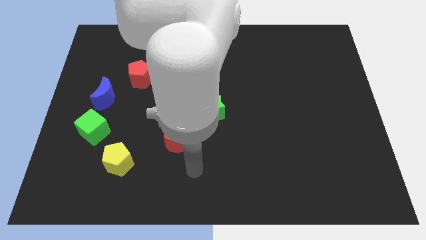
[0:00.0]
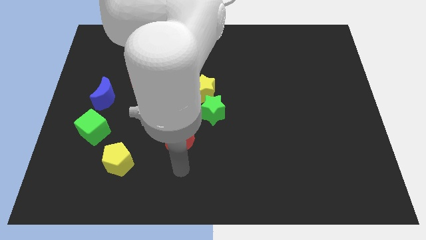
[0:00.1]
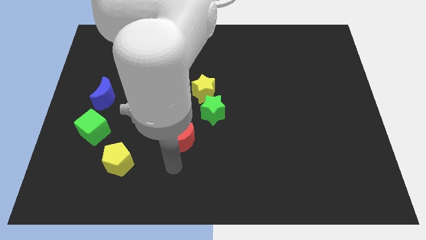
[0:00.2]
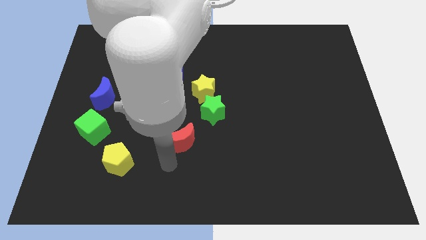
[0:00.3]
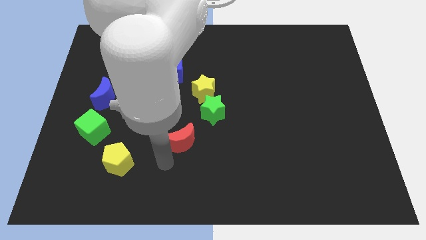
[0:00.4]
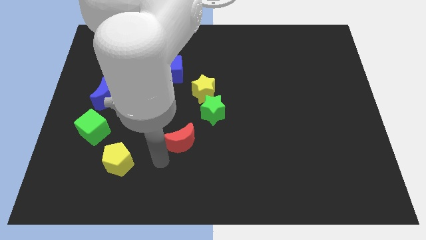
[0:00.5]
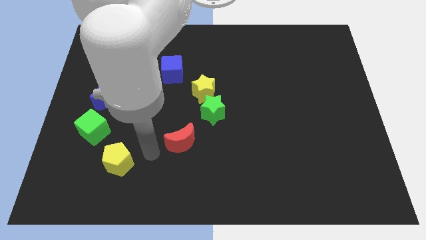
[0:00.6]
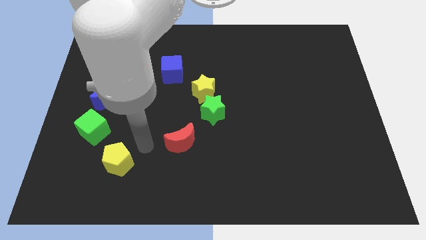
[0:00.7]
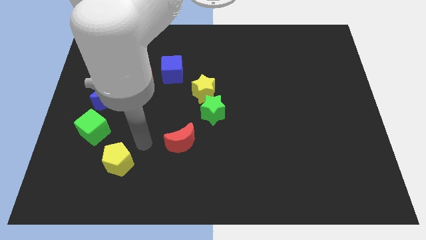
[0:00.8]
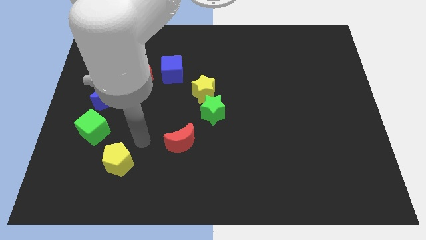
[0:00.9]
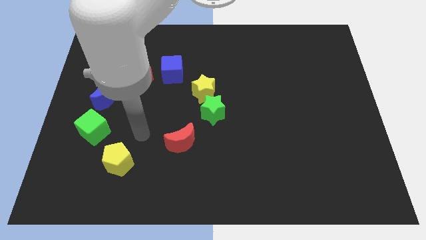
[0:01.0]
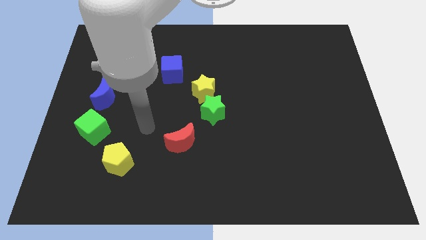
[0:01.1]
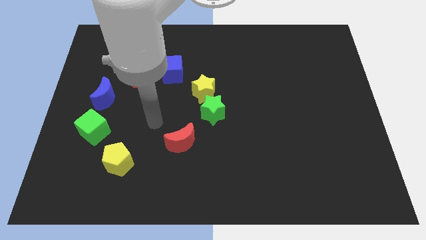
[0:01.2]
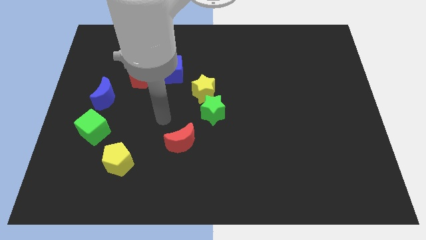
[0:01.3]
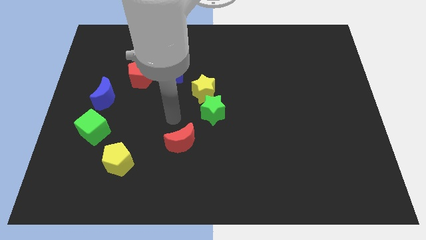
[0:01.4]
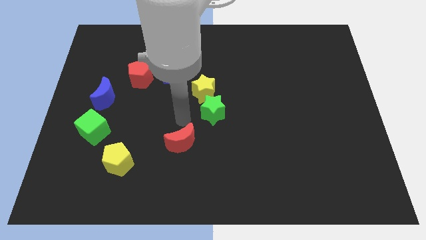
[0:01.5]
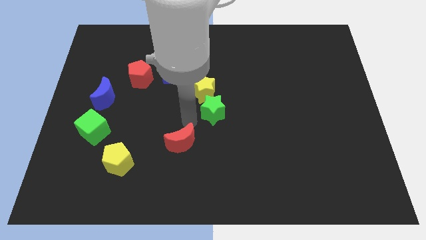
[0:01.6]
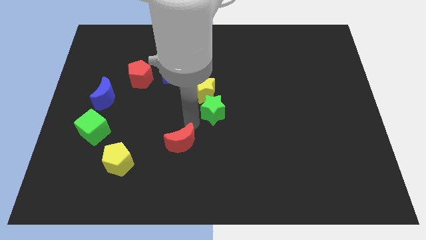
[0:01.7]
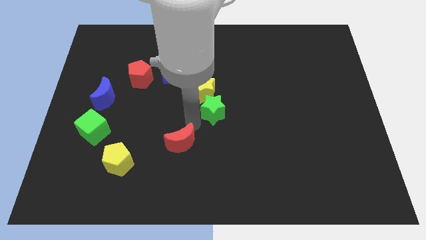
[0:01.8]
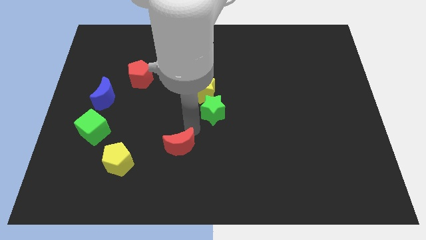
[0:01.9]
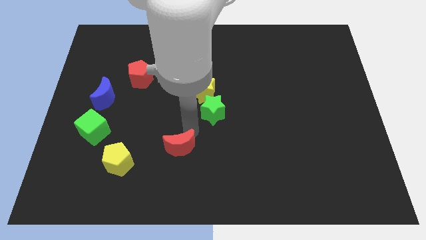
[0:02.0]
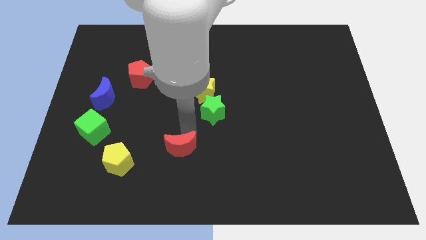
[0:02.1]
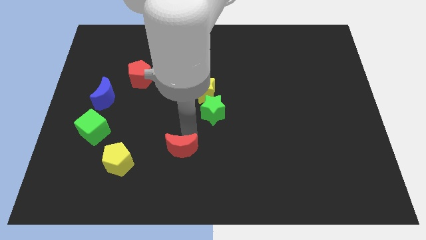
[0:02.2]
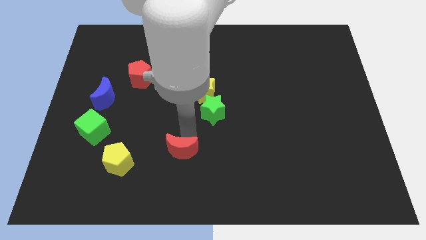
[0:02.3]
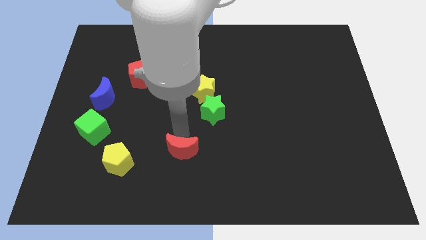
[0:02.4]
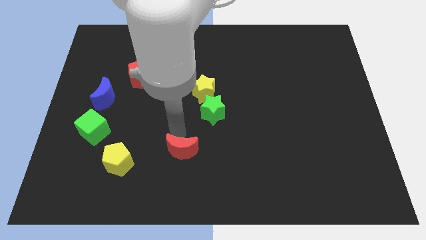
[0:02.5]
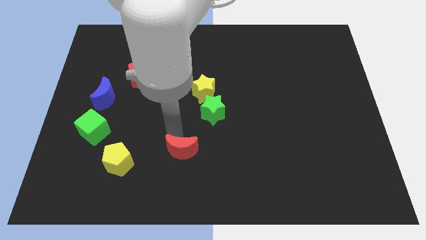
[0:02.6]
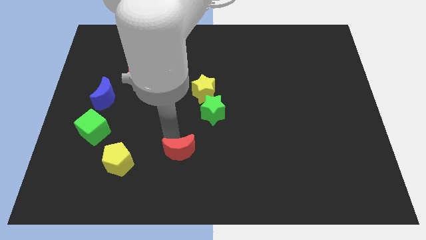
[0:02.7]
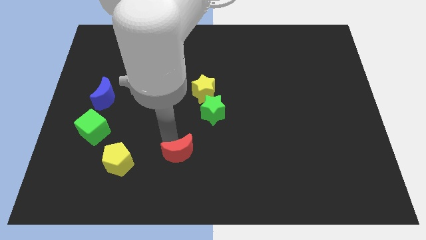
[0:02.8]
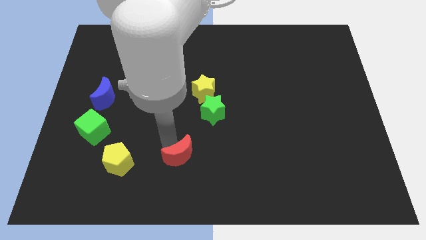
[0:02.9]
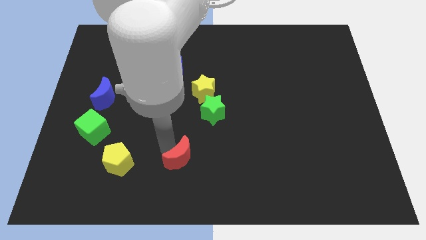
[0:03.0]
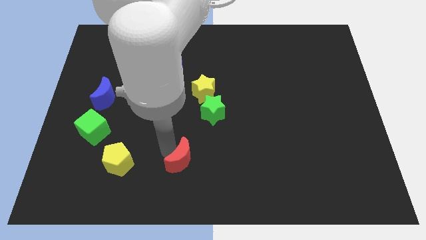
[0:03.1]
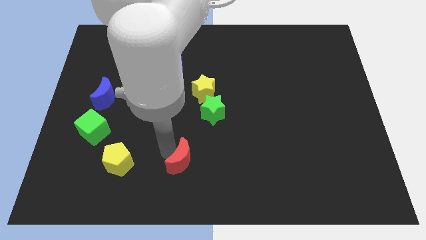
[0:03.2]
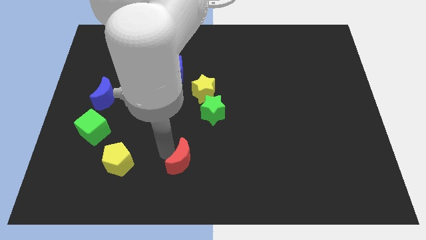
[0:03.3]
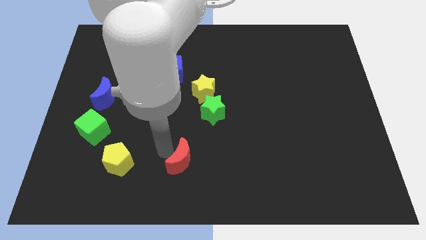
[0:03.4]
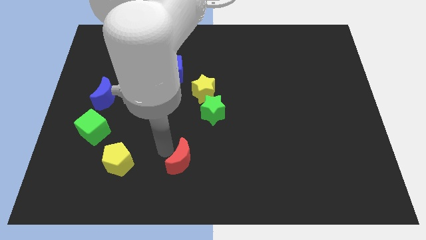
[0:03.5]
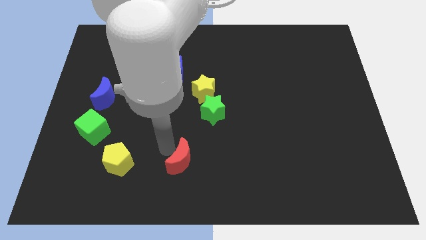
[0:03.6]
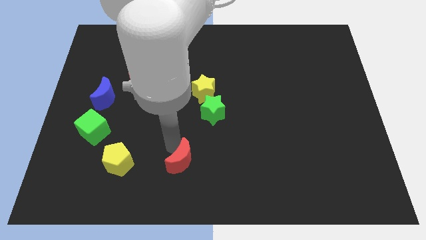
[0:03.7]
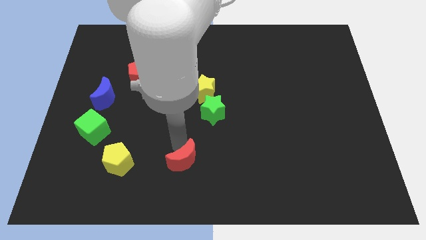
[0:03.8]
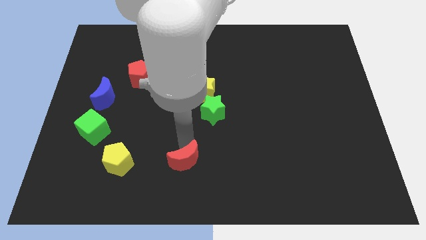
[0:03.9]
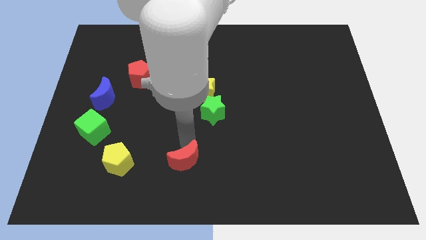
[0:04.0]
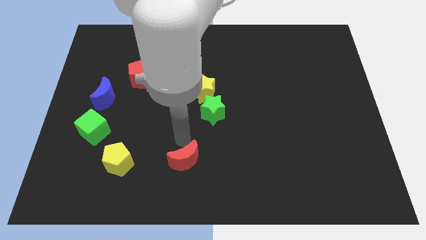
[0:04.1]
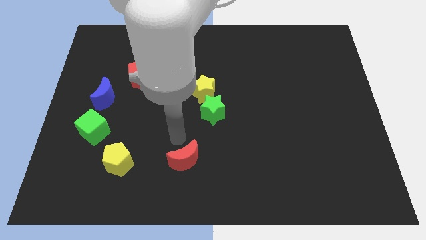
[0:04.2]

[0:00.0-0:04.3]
slightly move the red moon downwards of the board

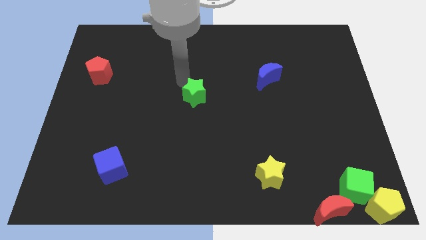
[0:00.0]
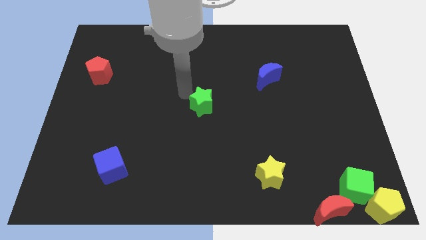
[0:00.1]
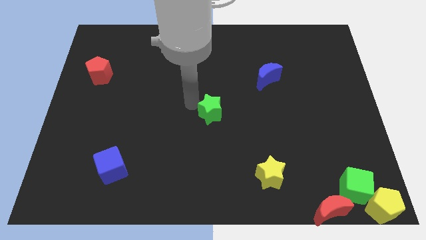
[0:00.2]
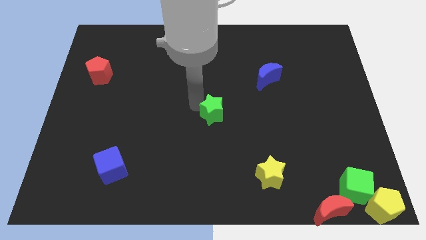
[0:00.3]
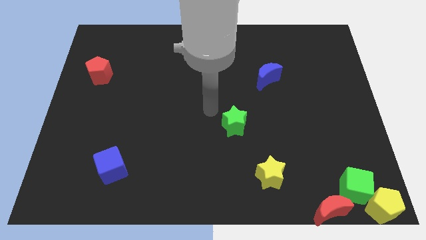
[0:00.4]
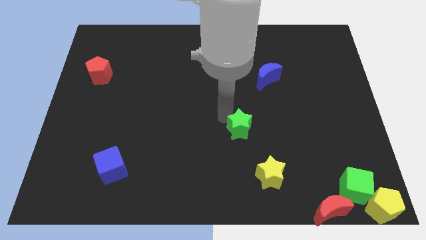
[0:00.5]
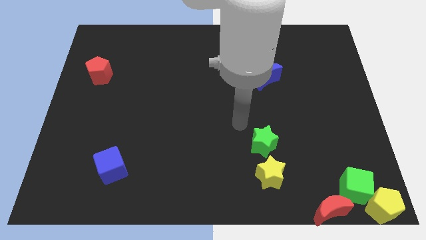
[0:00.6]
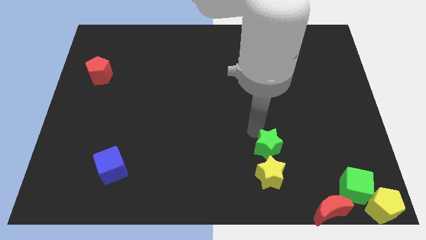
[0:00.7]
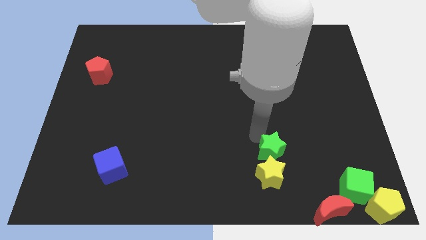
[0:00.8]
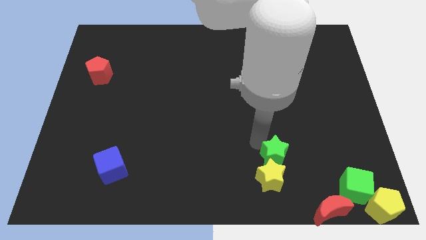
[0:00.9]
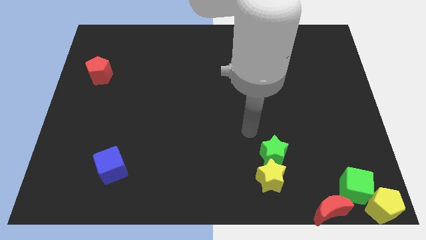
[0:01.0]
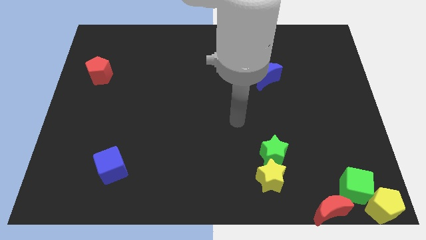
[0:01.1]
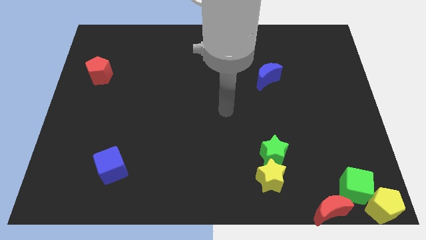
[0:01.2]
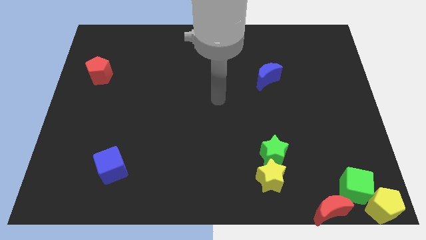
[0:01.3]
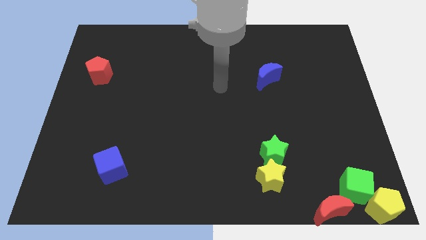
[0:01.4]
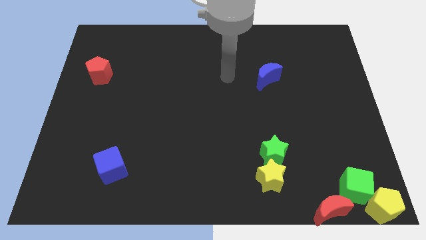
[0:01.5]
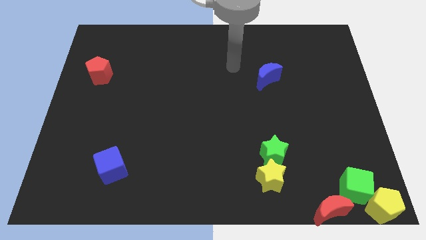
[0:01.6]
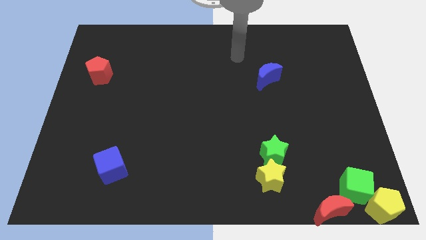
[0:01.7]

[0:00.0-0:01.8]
put the green and yellow stars together

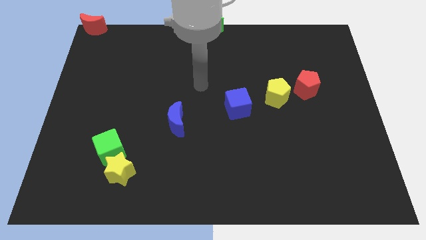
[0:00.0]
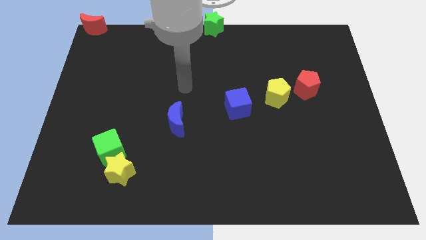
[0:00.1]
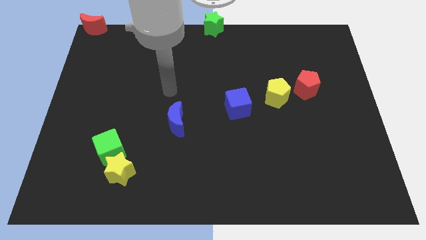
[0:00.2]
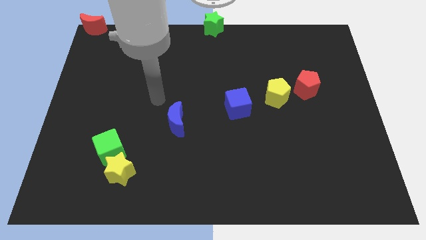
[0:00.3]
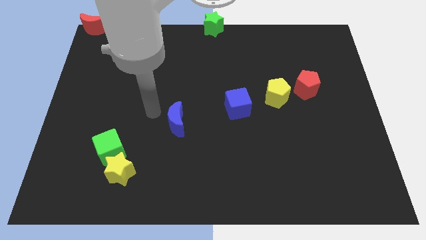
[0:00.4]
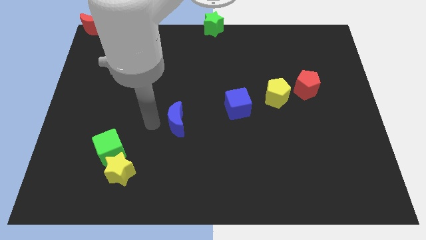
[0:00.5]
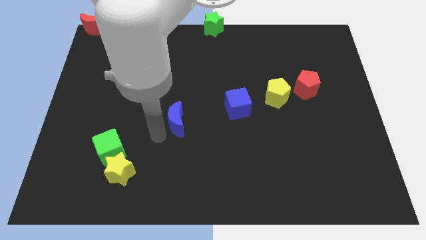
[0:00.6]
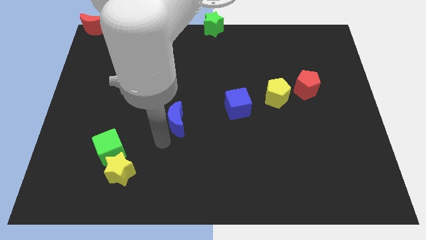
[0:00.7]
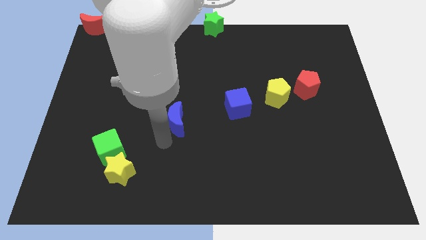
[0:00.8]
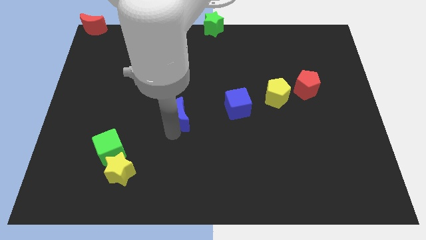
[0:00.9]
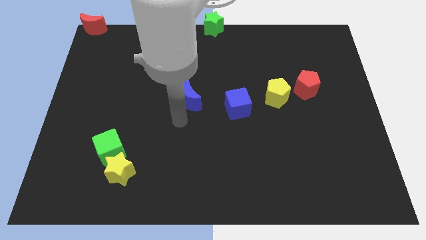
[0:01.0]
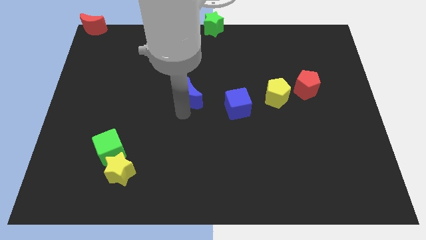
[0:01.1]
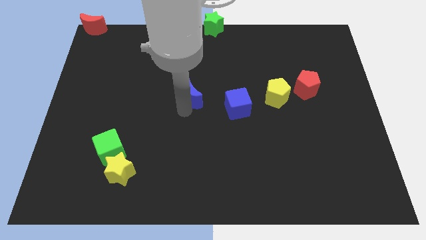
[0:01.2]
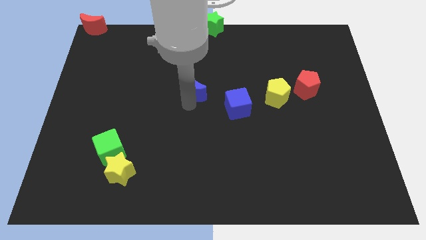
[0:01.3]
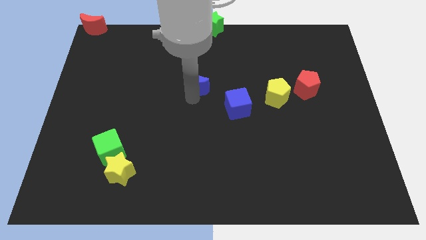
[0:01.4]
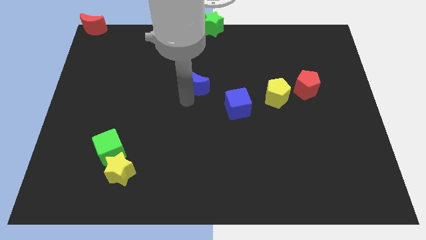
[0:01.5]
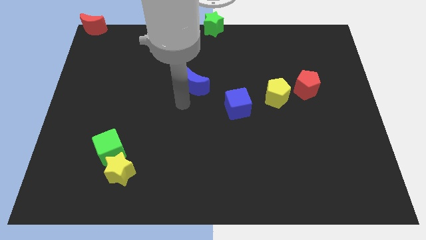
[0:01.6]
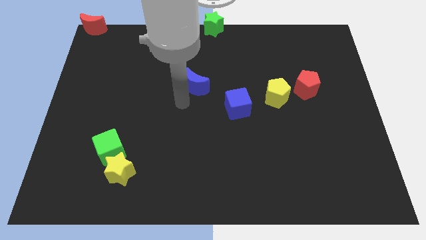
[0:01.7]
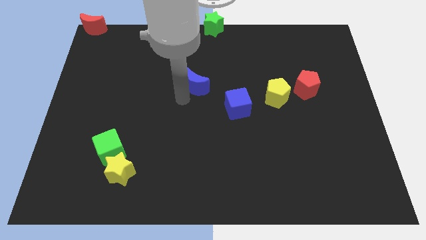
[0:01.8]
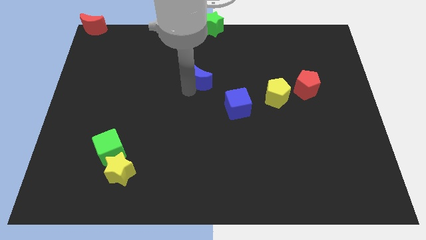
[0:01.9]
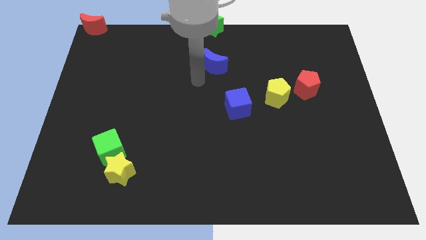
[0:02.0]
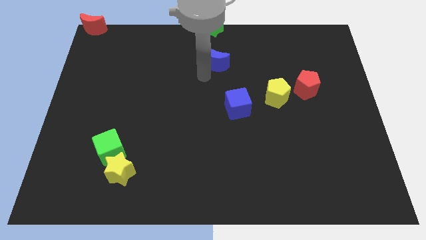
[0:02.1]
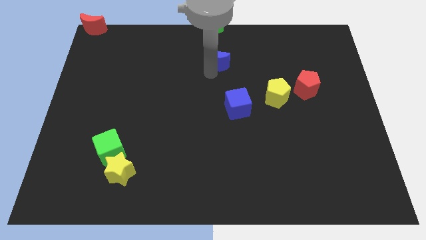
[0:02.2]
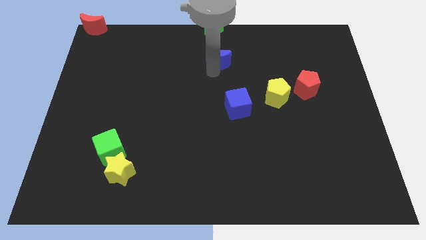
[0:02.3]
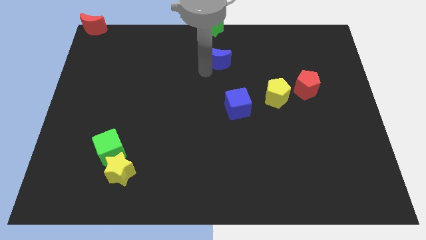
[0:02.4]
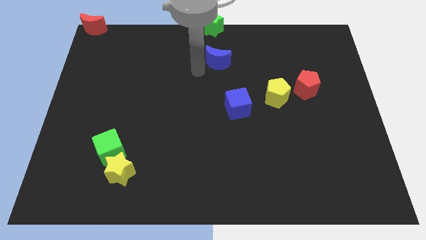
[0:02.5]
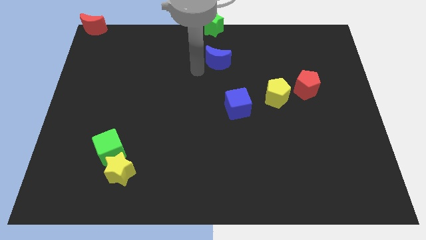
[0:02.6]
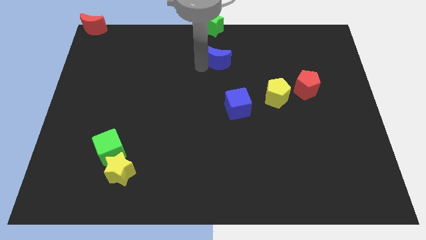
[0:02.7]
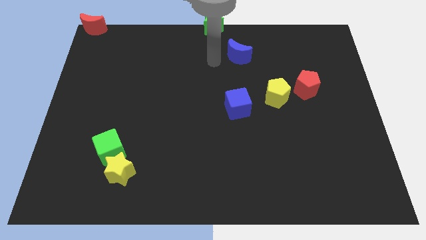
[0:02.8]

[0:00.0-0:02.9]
push blue crescent below green star
